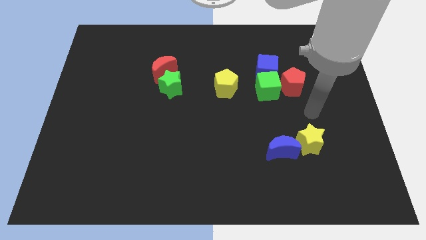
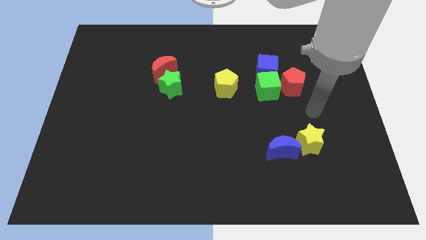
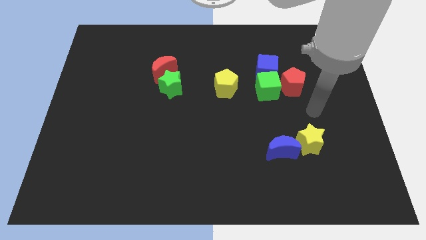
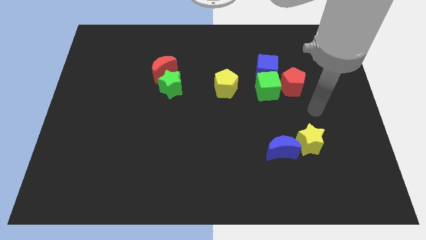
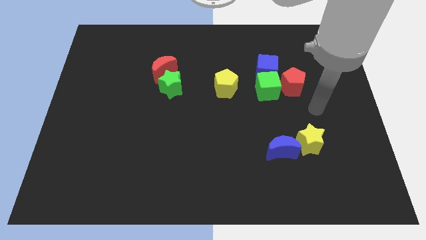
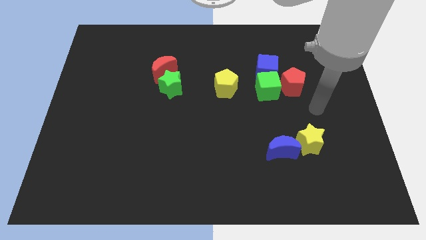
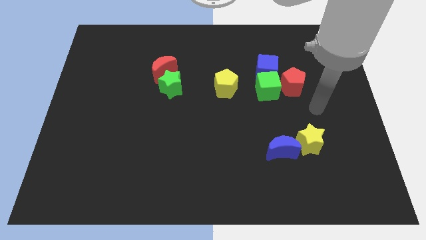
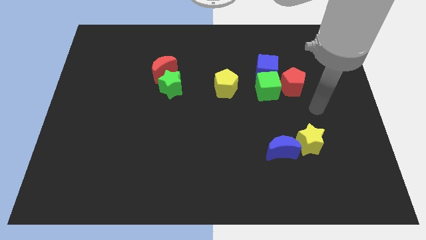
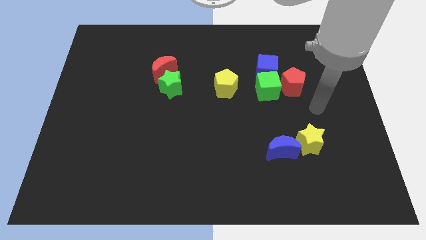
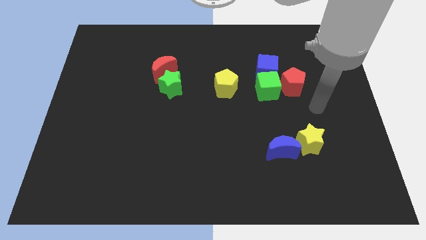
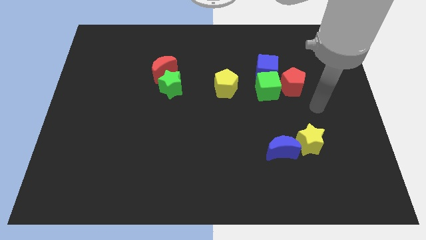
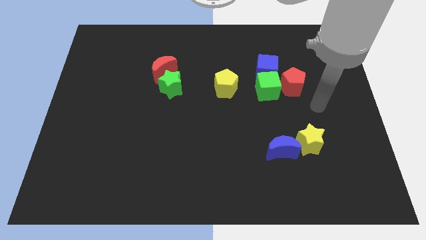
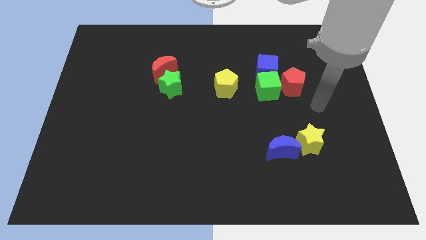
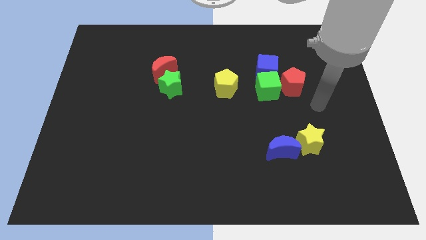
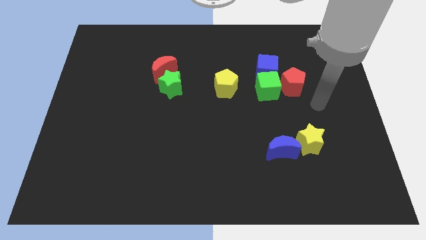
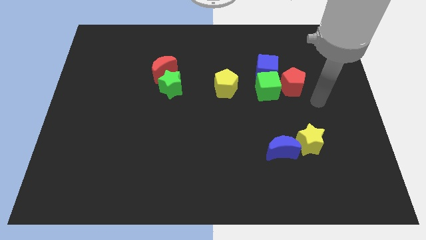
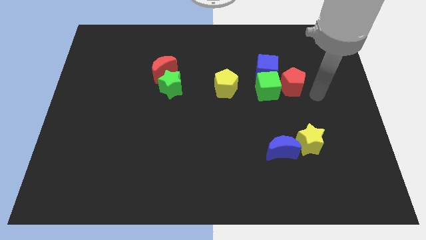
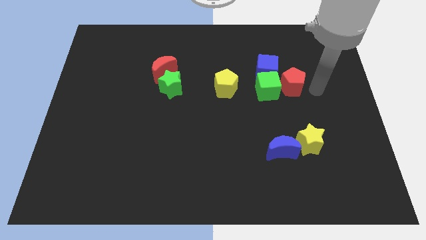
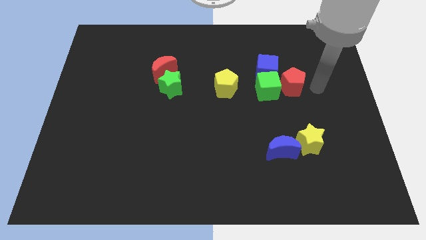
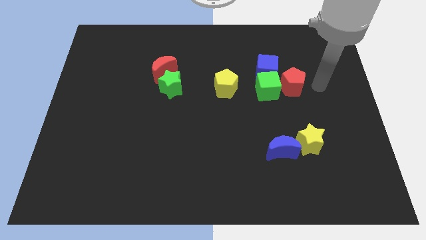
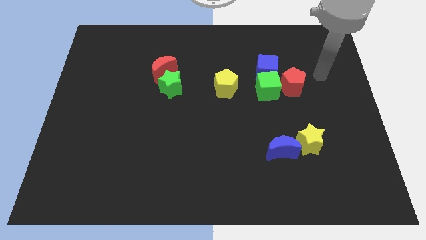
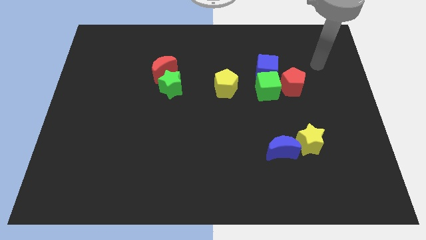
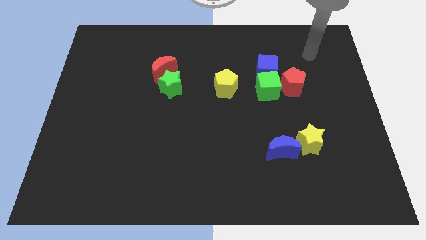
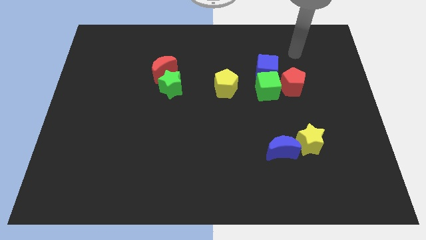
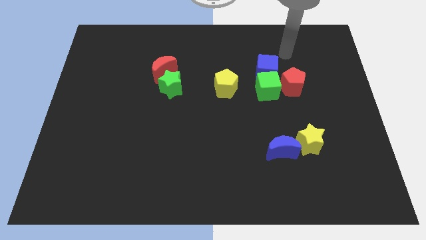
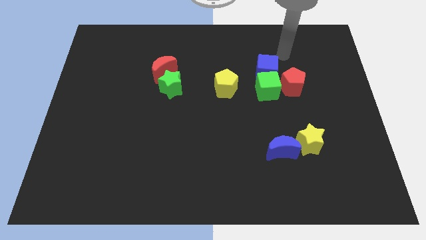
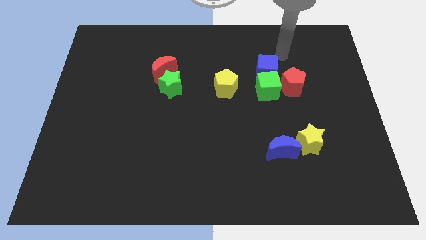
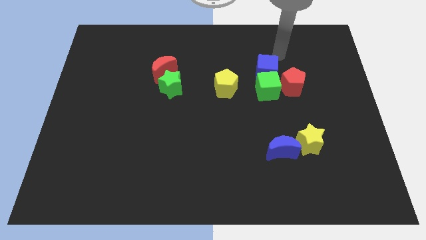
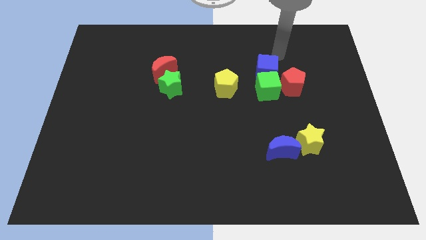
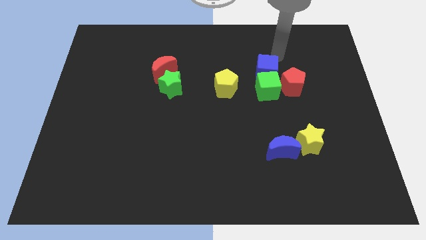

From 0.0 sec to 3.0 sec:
move the arm towards the top right of the blue cube

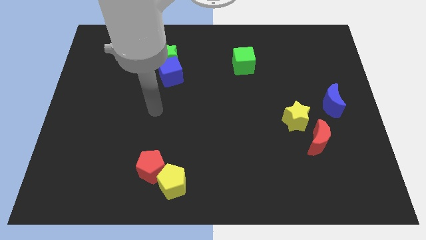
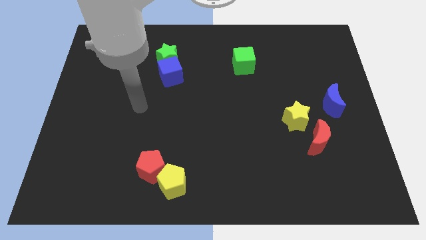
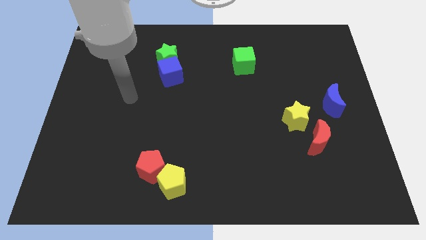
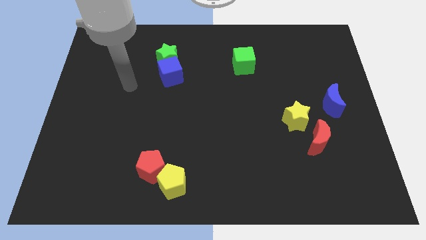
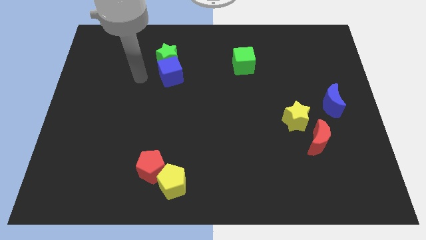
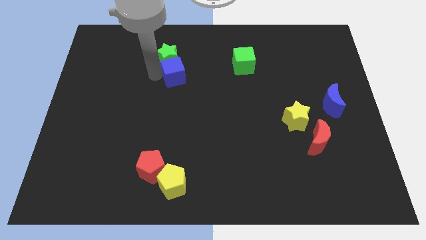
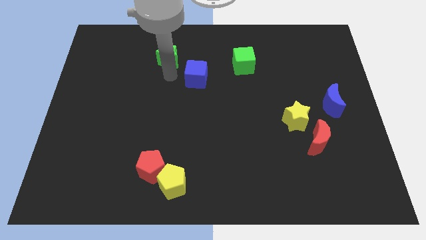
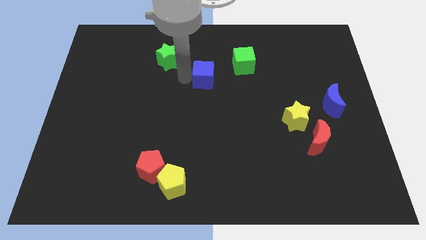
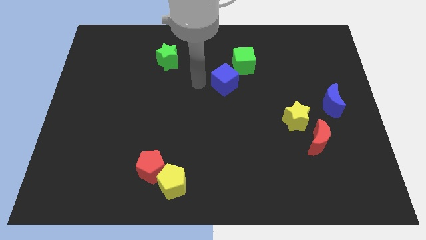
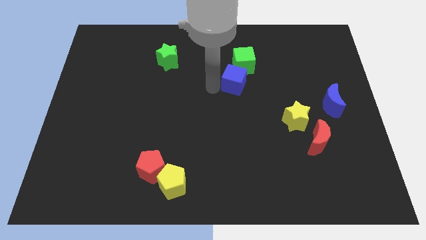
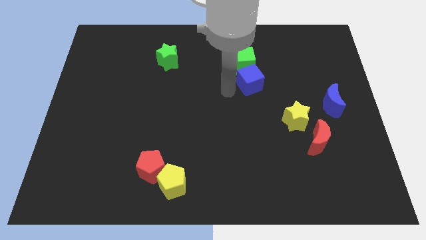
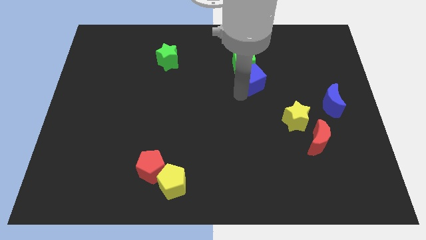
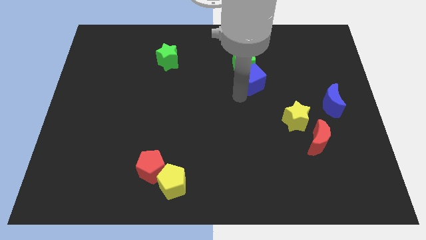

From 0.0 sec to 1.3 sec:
place the blue cube under the green cube

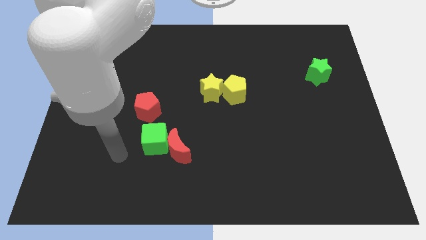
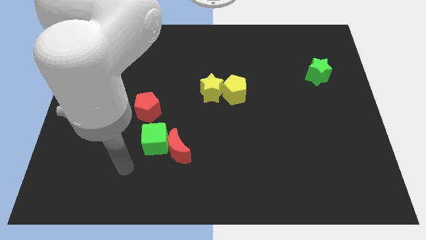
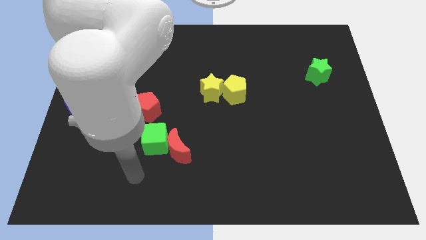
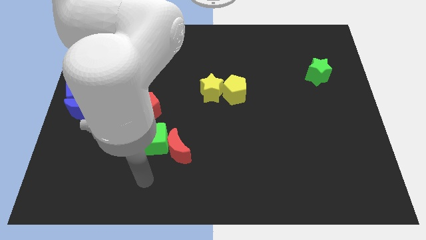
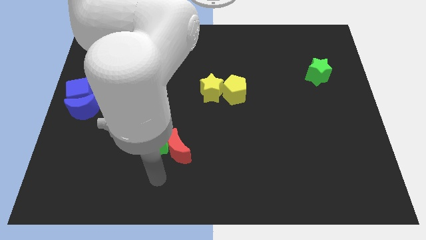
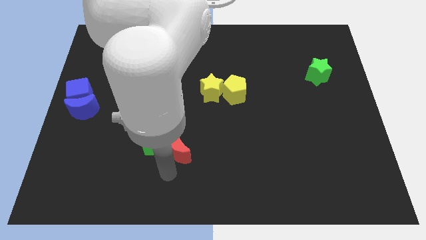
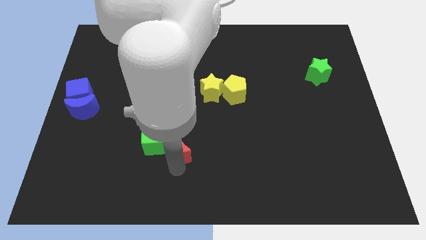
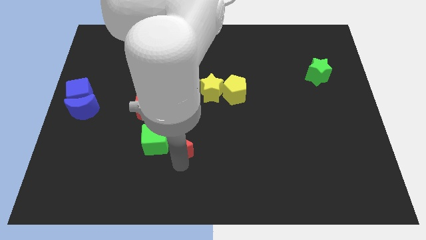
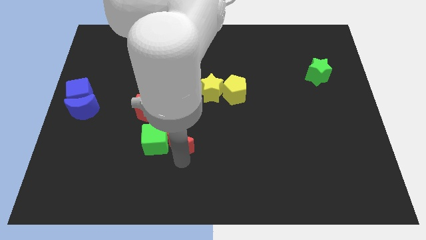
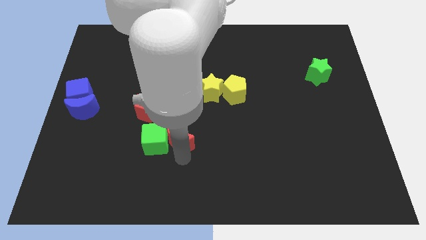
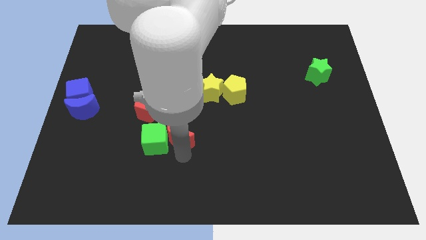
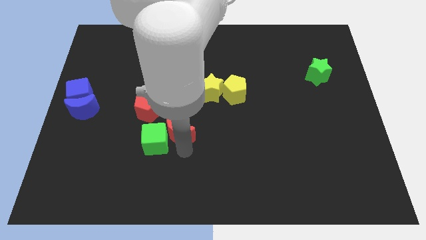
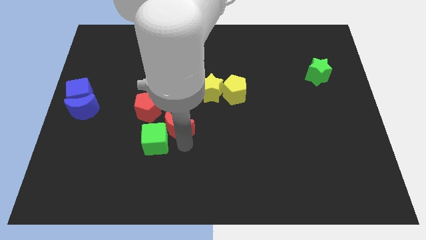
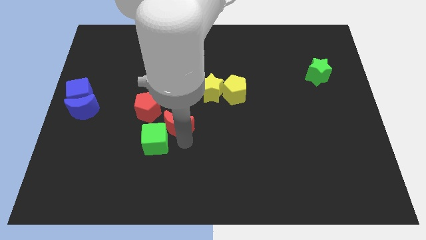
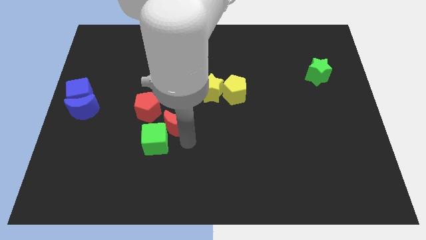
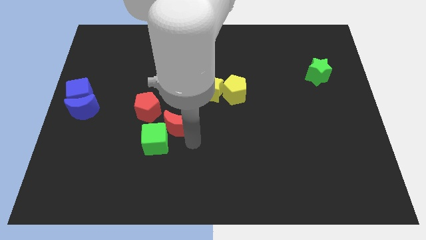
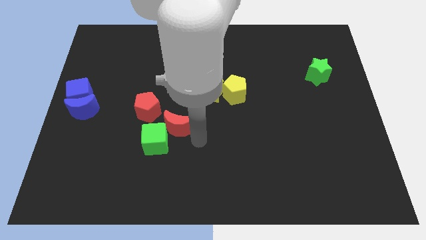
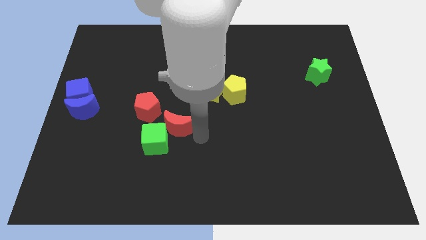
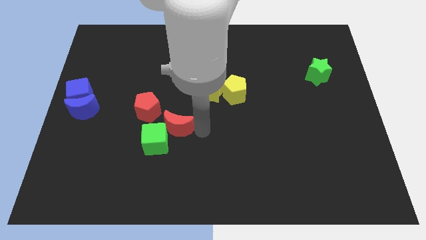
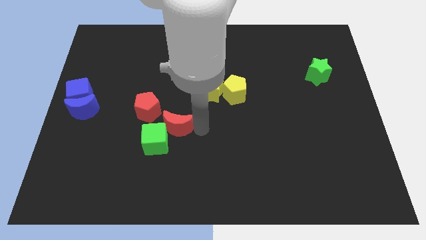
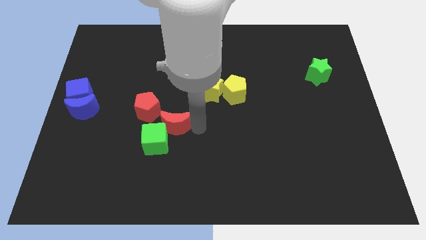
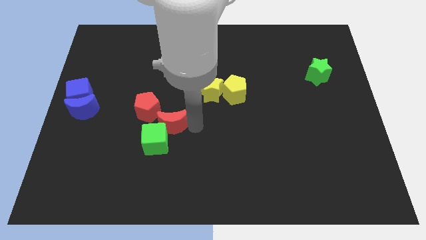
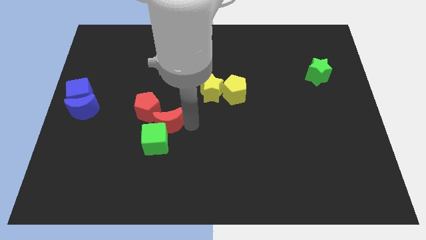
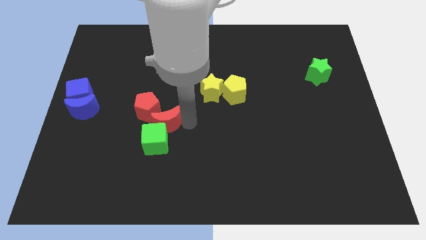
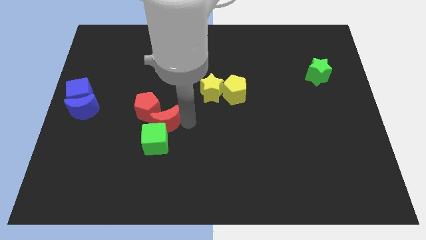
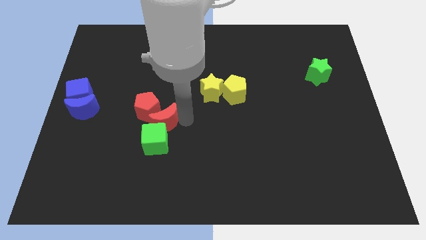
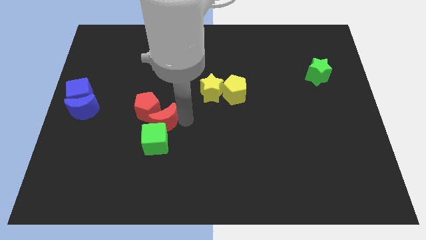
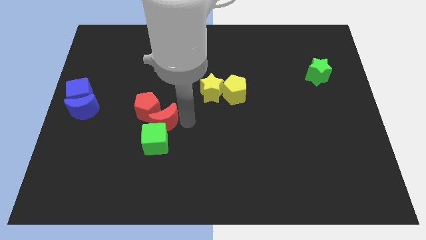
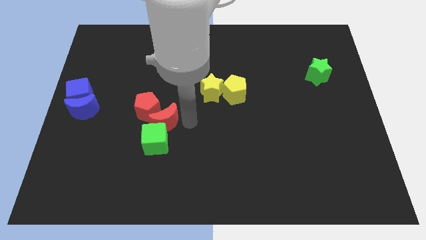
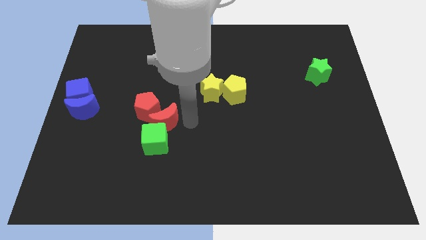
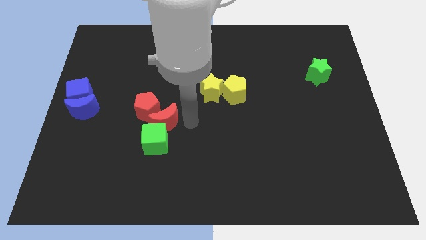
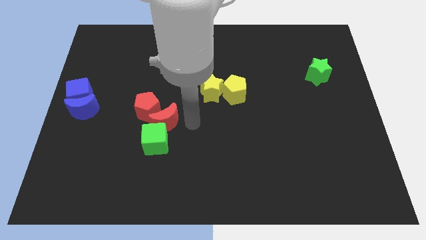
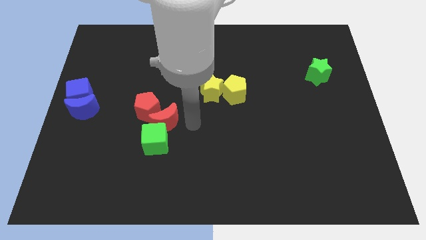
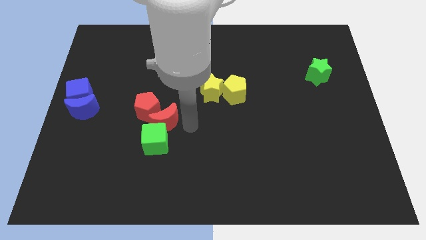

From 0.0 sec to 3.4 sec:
push the red crescent towards the red pentagon

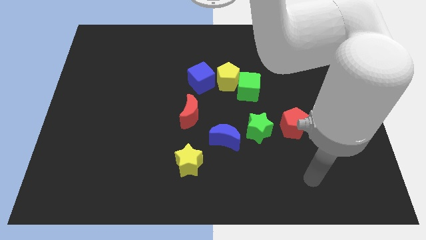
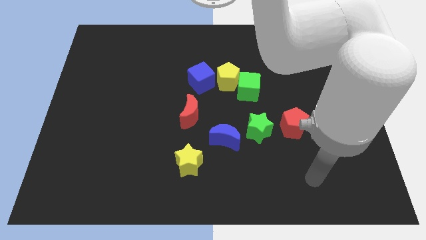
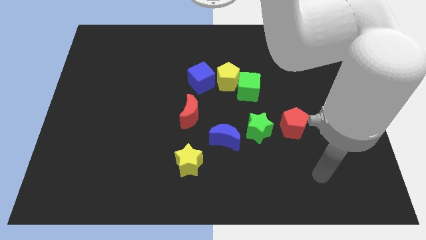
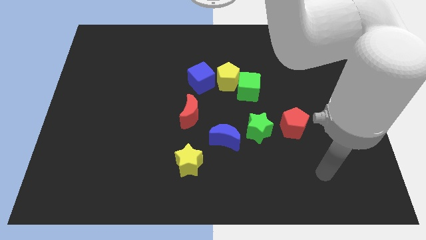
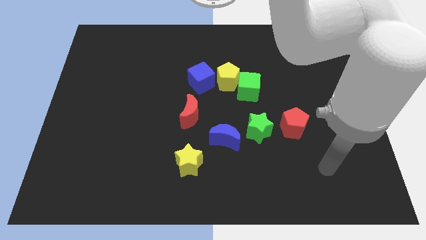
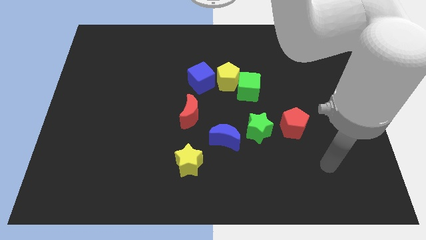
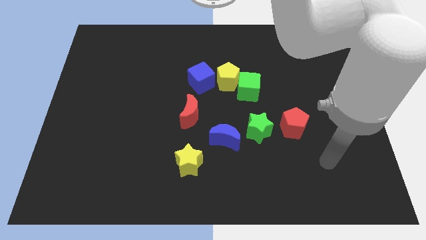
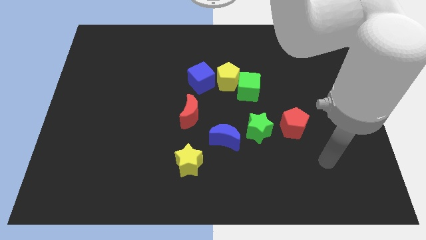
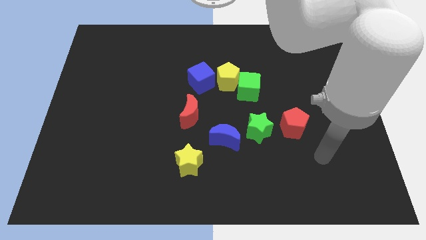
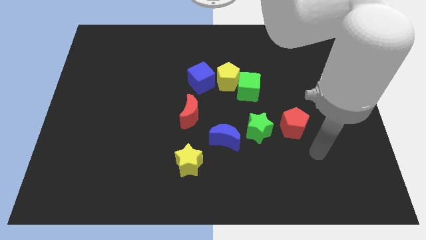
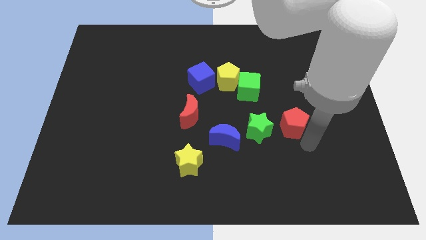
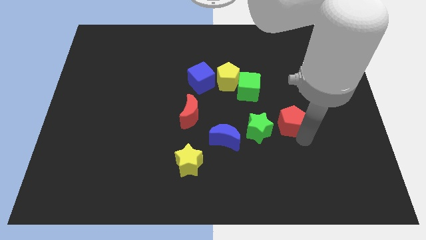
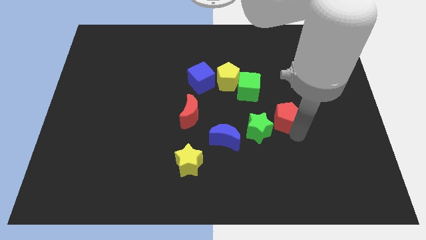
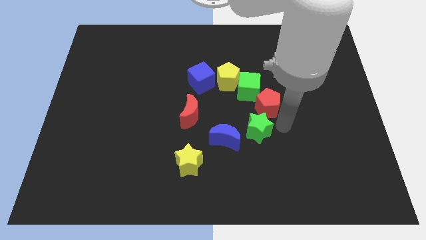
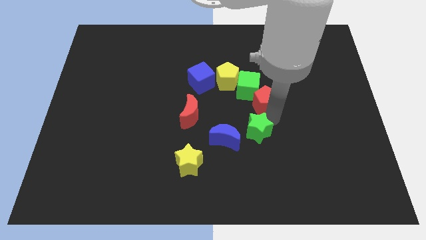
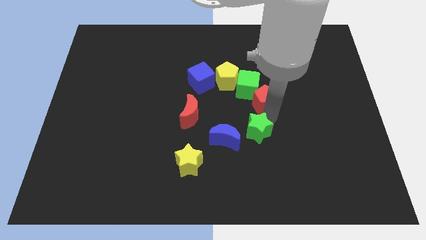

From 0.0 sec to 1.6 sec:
push the red pentagon into the green cube
